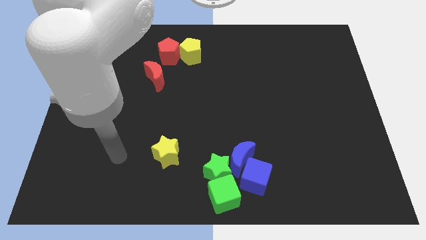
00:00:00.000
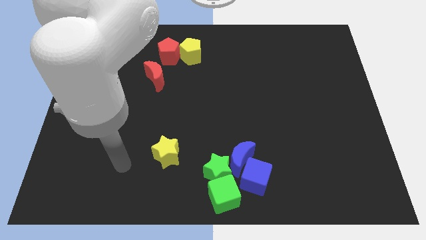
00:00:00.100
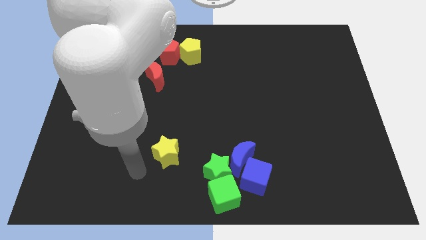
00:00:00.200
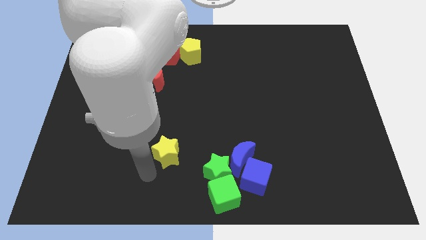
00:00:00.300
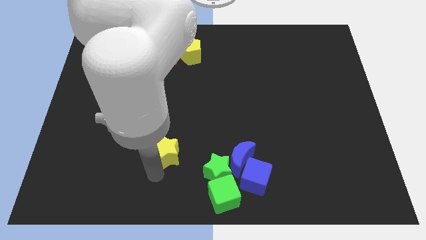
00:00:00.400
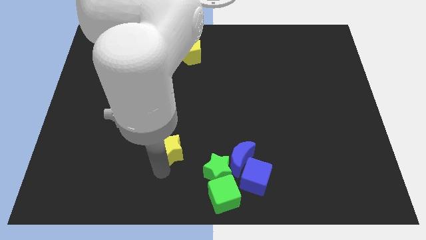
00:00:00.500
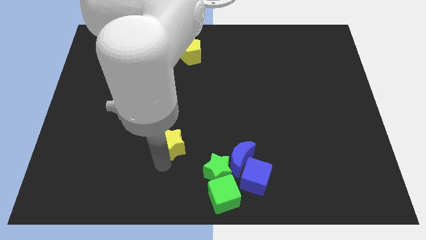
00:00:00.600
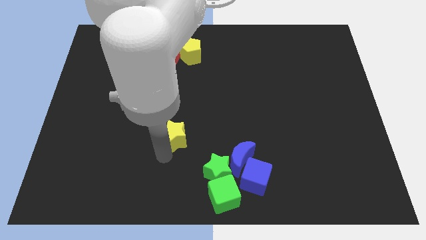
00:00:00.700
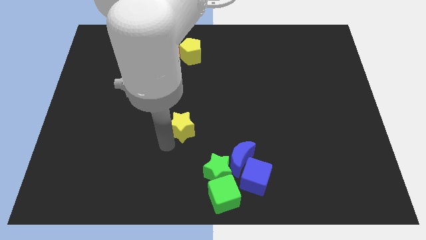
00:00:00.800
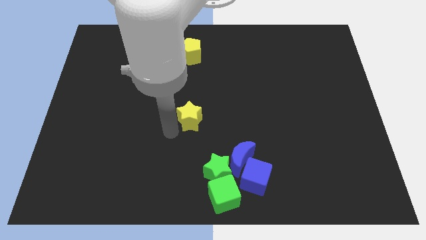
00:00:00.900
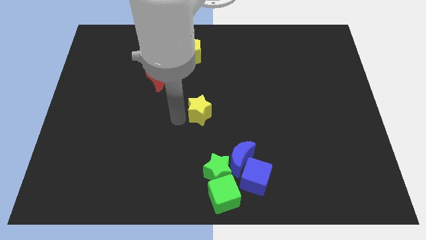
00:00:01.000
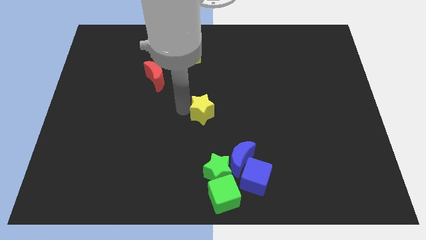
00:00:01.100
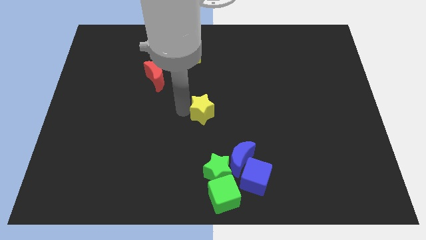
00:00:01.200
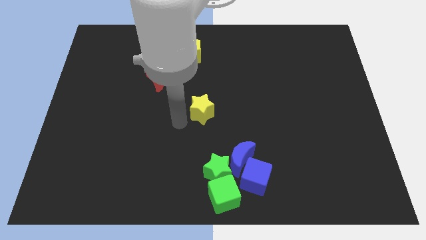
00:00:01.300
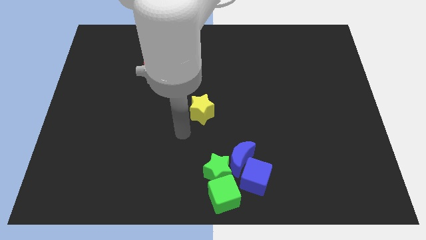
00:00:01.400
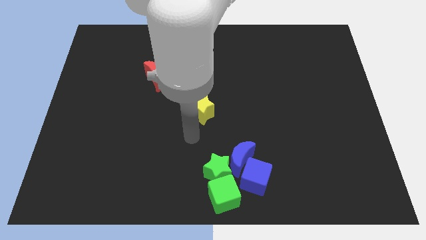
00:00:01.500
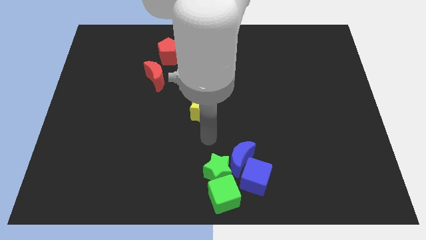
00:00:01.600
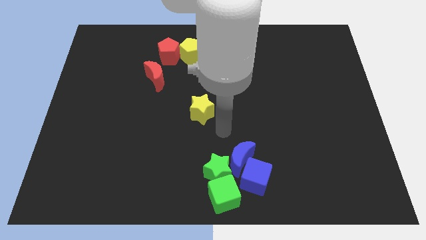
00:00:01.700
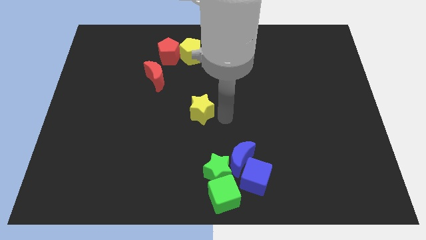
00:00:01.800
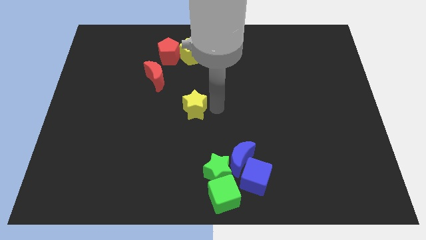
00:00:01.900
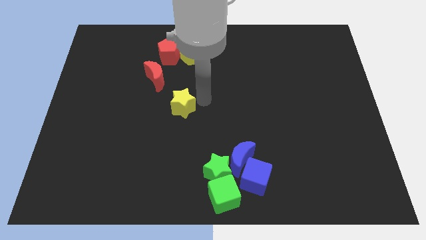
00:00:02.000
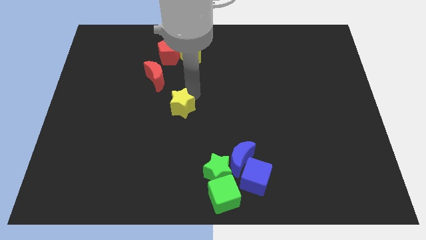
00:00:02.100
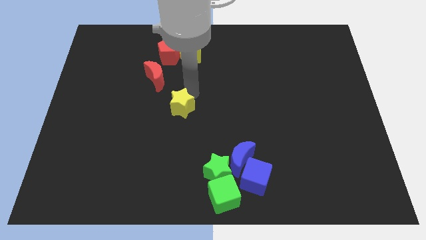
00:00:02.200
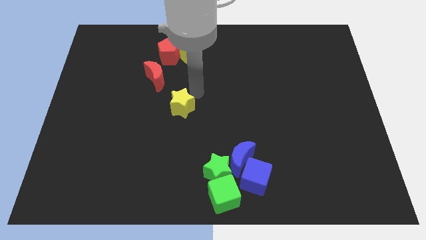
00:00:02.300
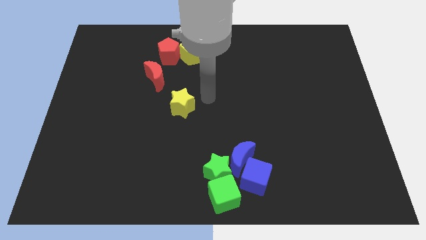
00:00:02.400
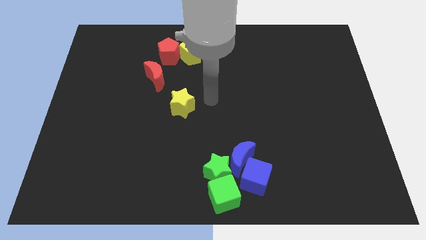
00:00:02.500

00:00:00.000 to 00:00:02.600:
push the yellow star vertically at the bottom side of the group of pentagons

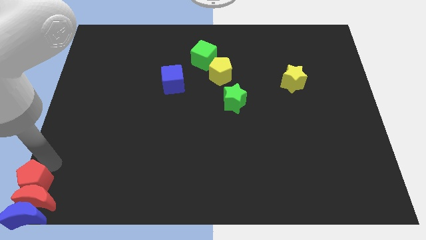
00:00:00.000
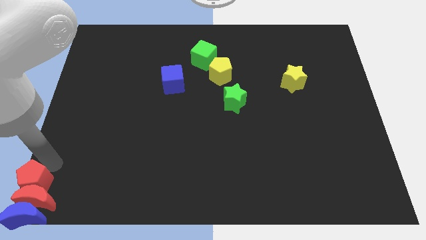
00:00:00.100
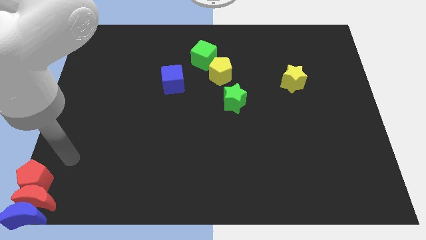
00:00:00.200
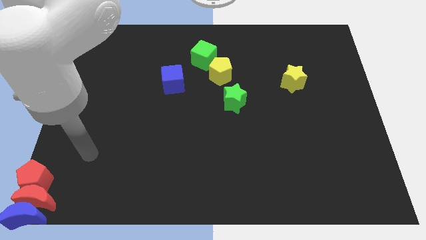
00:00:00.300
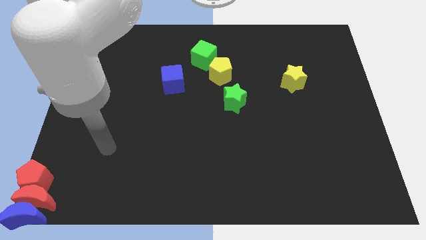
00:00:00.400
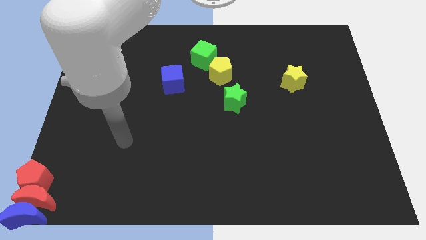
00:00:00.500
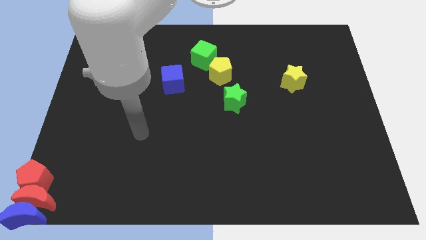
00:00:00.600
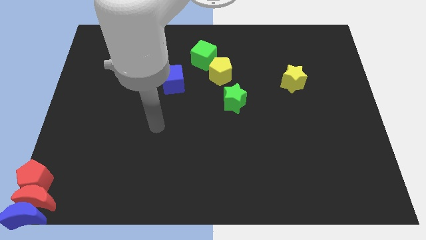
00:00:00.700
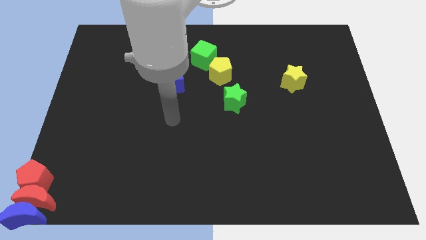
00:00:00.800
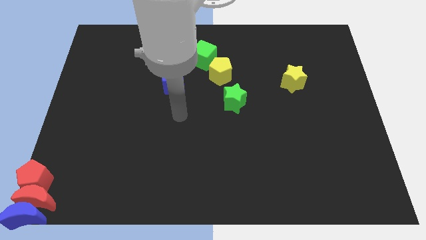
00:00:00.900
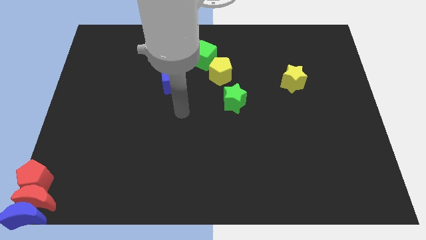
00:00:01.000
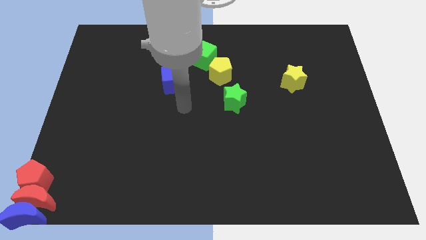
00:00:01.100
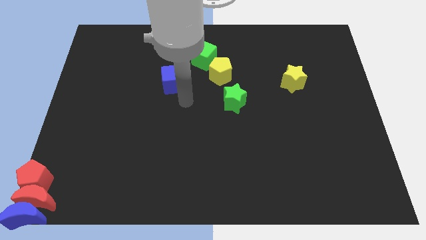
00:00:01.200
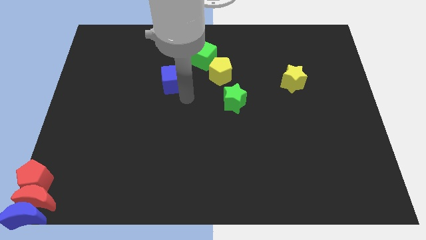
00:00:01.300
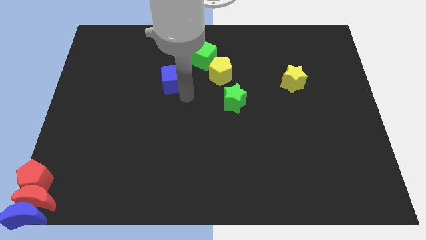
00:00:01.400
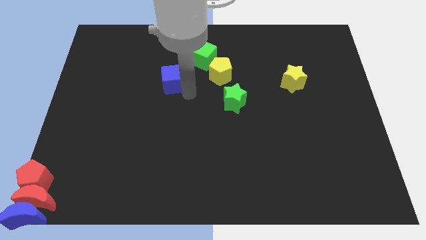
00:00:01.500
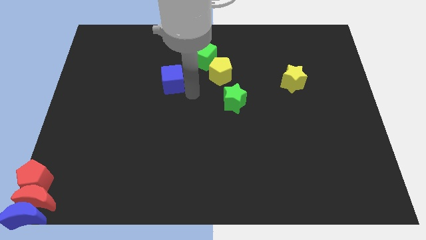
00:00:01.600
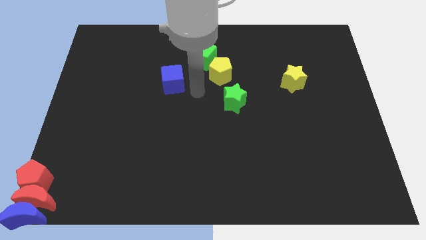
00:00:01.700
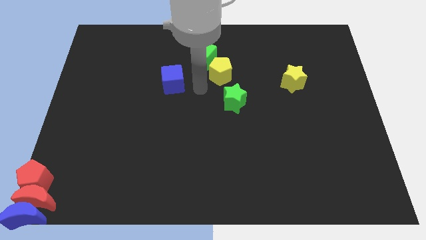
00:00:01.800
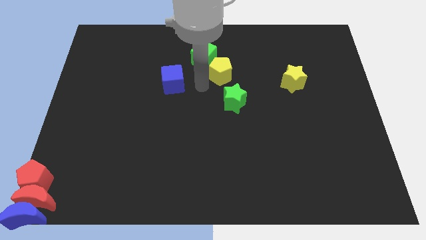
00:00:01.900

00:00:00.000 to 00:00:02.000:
move your hand towards the right of the blue cube at the center of the board

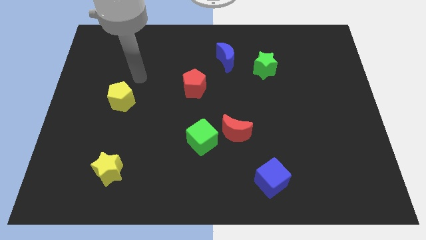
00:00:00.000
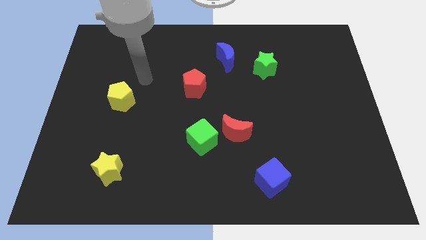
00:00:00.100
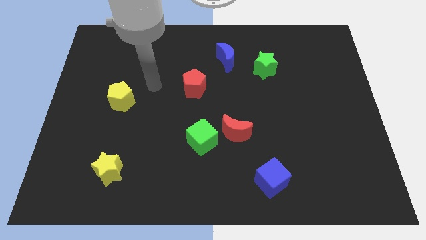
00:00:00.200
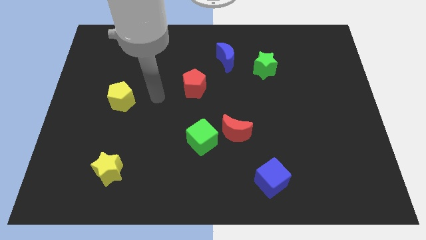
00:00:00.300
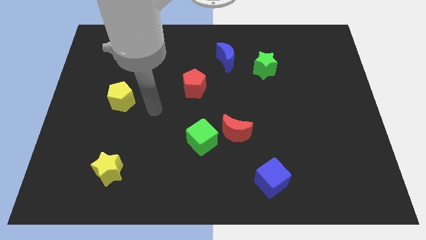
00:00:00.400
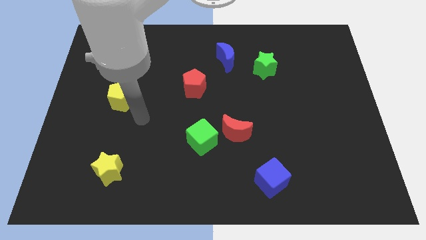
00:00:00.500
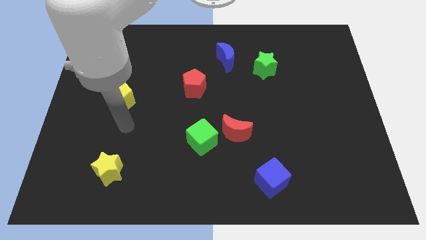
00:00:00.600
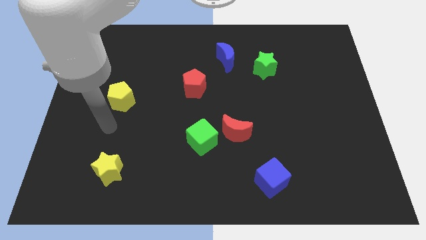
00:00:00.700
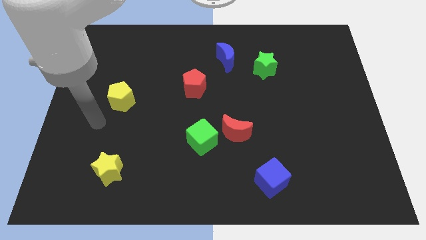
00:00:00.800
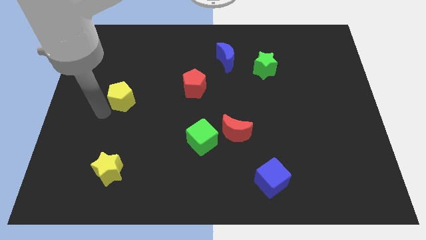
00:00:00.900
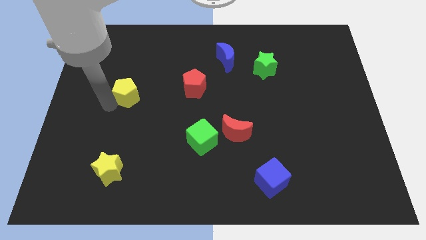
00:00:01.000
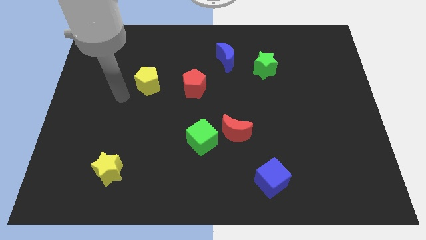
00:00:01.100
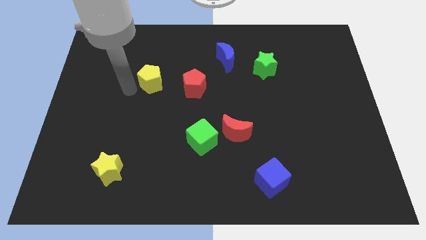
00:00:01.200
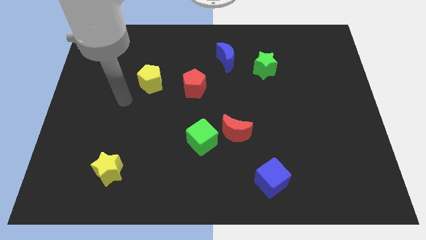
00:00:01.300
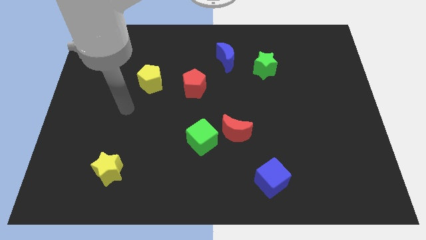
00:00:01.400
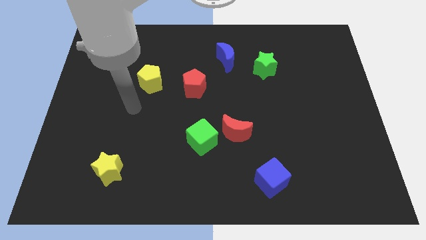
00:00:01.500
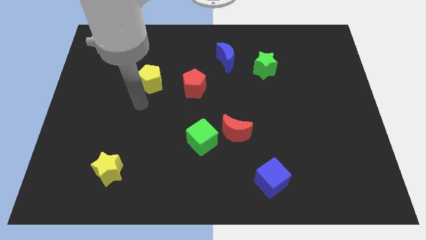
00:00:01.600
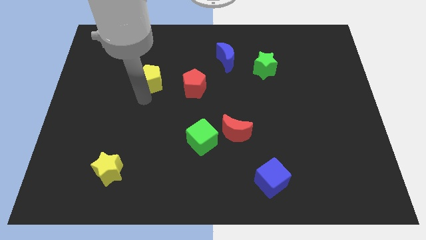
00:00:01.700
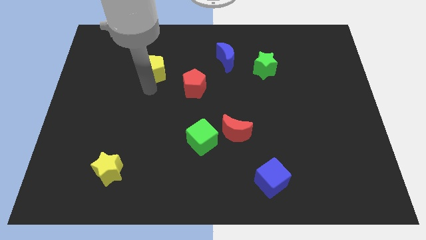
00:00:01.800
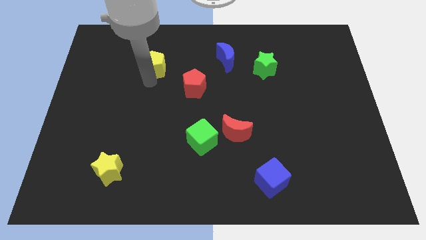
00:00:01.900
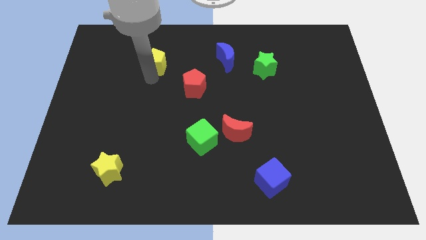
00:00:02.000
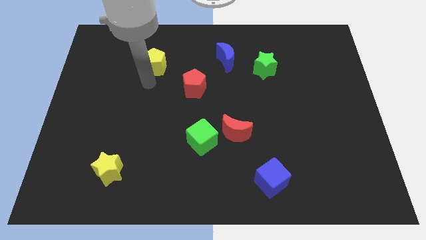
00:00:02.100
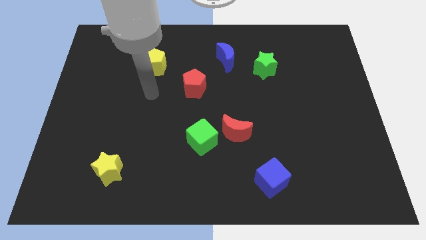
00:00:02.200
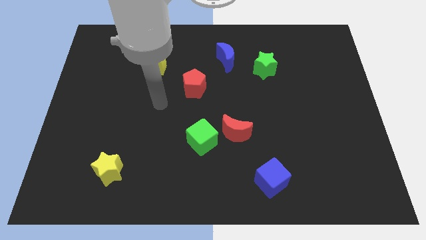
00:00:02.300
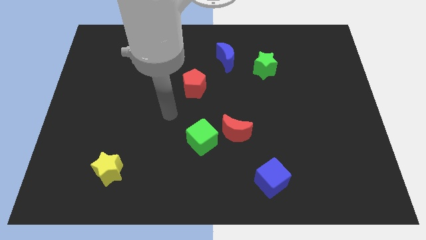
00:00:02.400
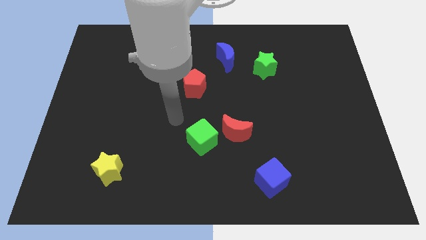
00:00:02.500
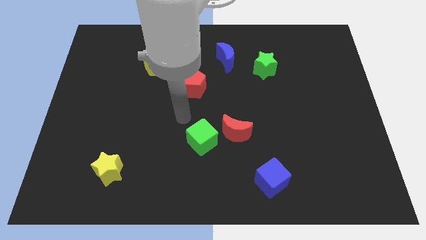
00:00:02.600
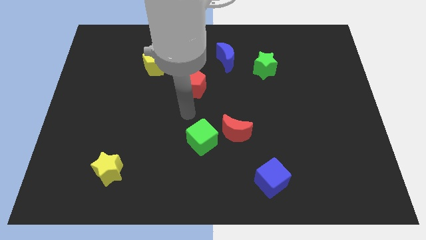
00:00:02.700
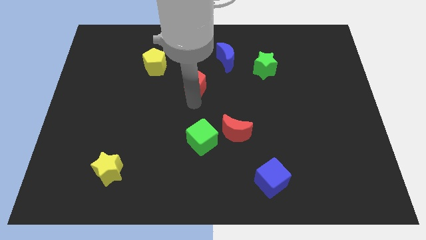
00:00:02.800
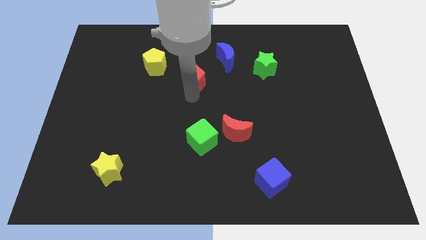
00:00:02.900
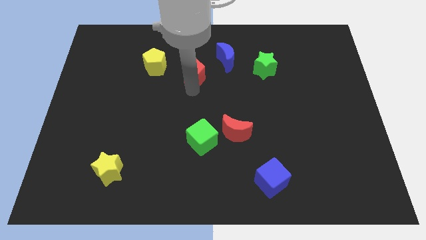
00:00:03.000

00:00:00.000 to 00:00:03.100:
move the yellow pentagon left to the red pentagon

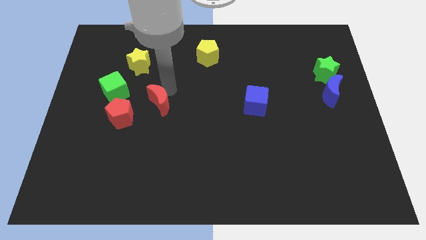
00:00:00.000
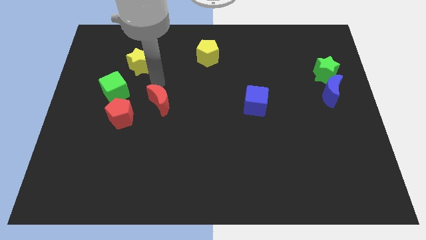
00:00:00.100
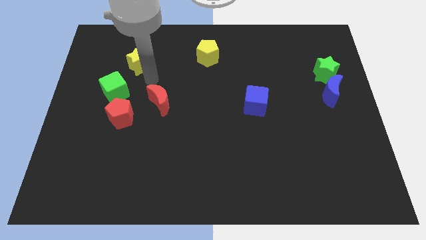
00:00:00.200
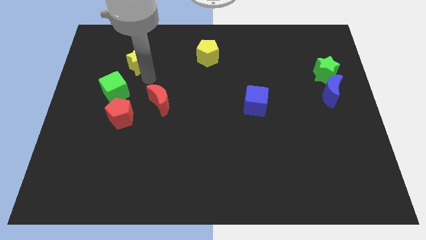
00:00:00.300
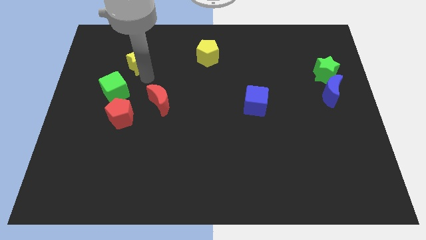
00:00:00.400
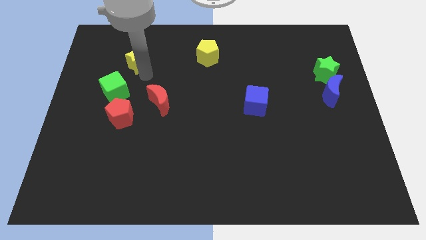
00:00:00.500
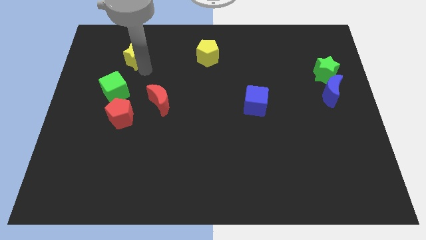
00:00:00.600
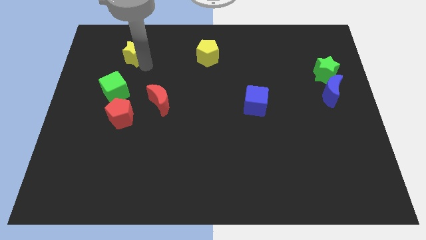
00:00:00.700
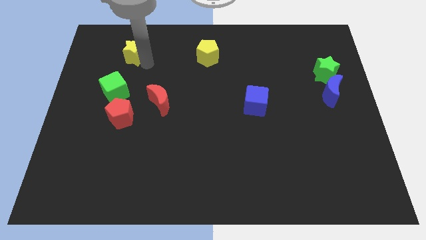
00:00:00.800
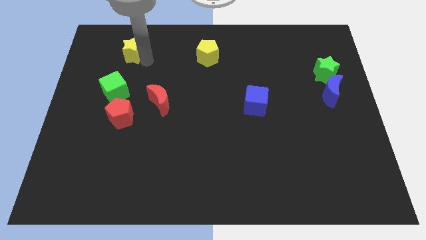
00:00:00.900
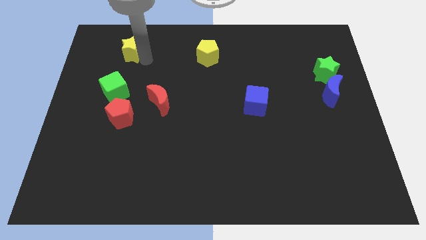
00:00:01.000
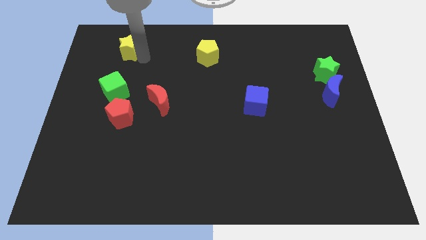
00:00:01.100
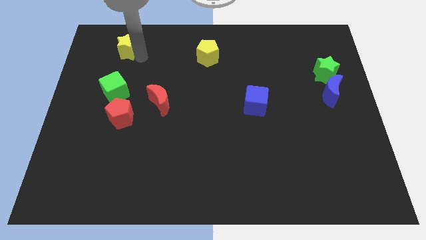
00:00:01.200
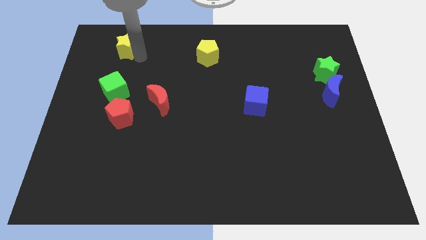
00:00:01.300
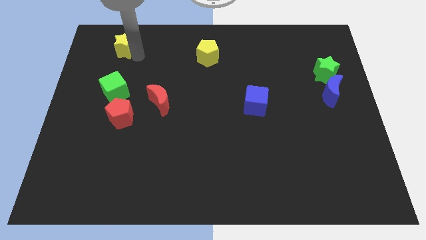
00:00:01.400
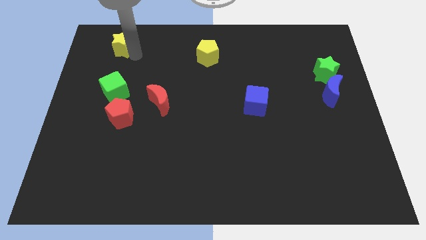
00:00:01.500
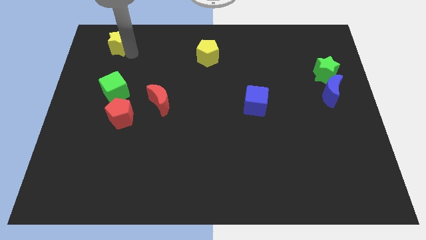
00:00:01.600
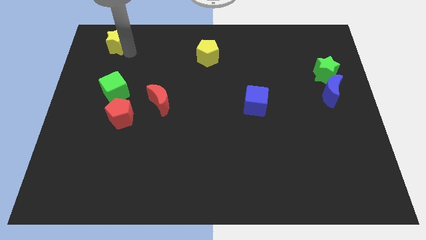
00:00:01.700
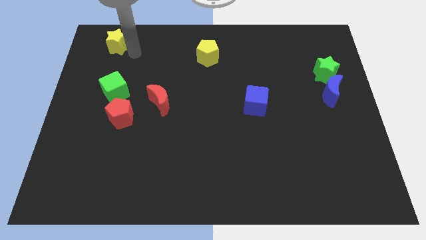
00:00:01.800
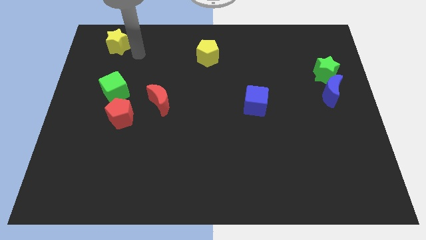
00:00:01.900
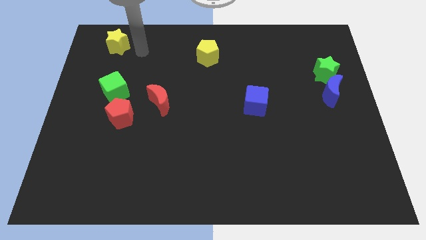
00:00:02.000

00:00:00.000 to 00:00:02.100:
place the yellow star above the green cube
